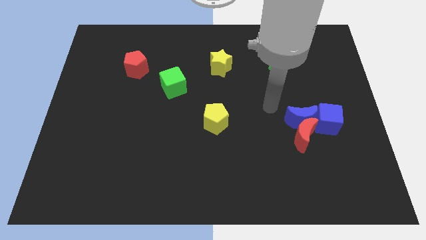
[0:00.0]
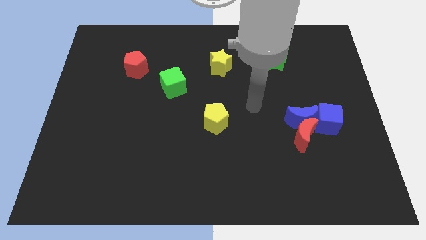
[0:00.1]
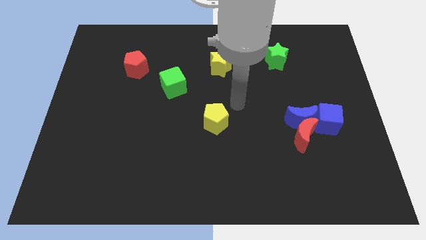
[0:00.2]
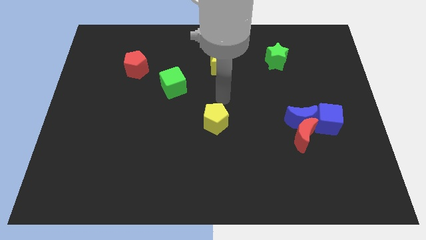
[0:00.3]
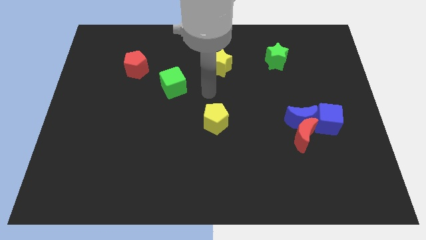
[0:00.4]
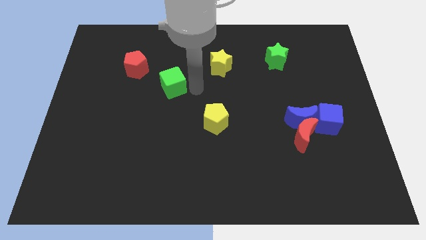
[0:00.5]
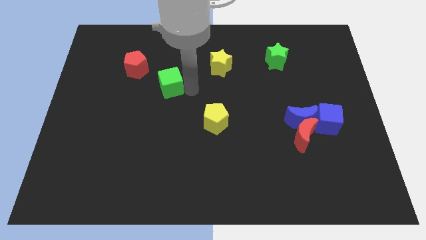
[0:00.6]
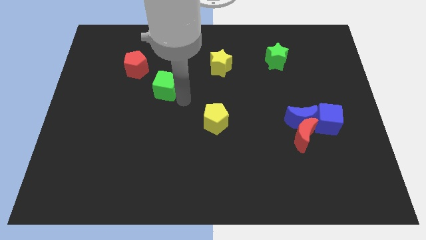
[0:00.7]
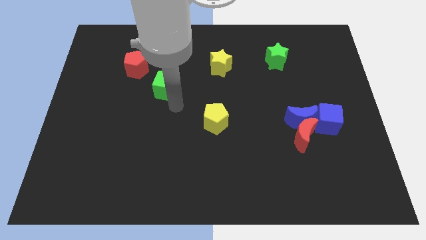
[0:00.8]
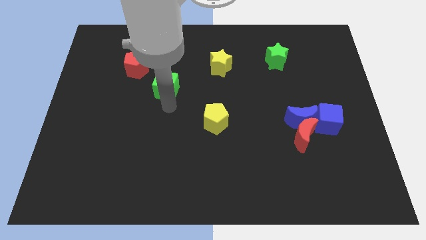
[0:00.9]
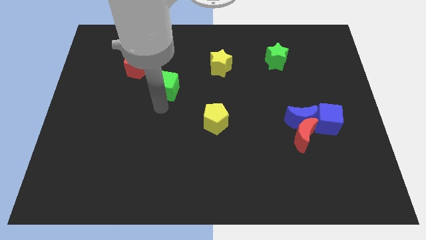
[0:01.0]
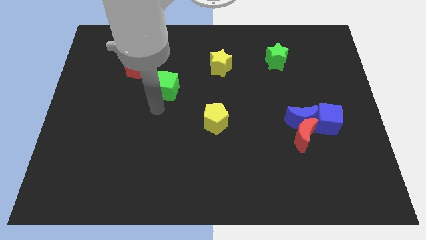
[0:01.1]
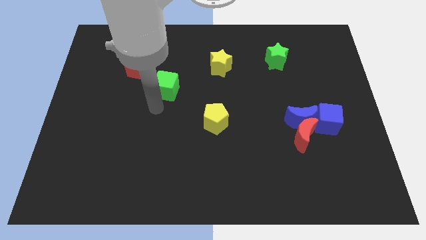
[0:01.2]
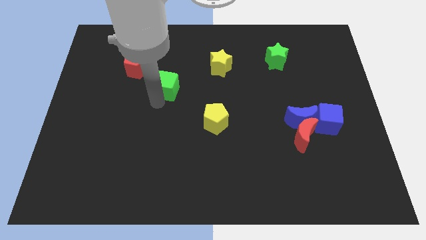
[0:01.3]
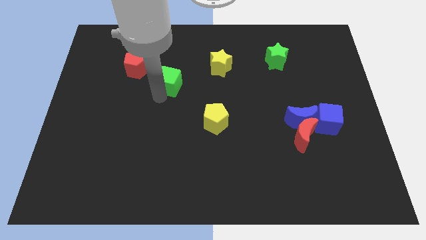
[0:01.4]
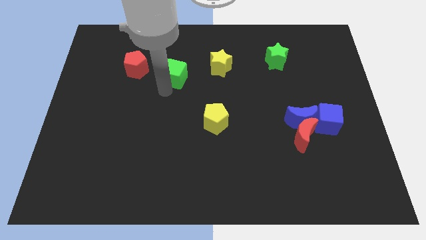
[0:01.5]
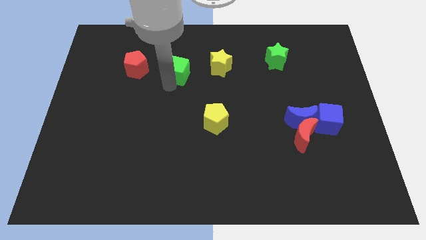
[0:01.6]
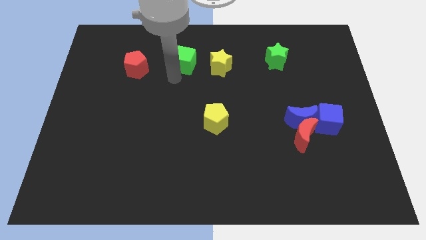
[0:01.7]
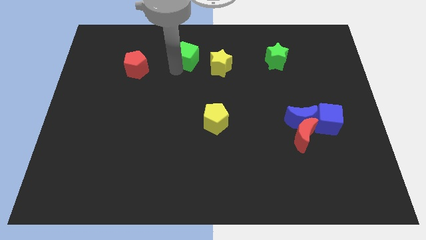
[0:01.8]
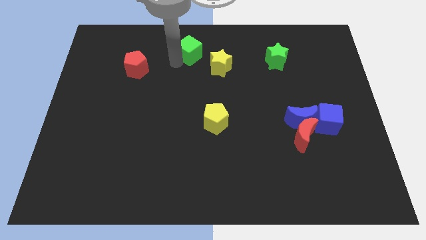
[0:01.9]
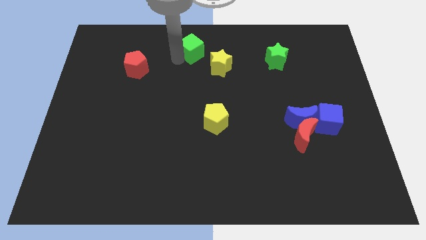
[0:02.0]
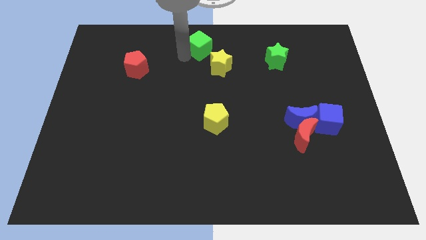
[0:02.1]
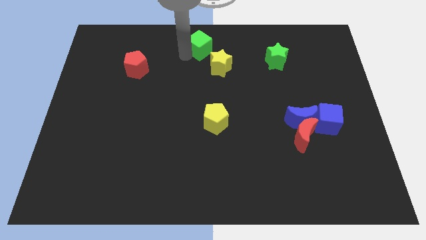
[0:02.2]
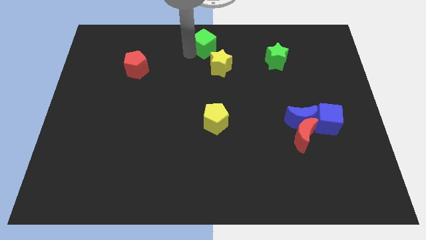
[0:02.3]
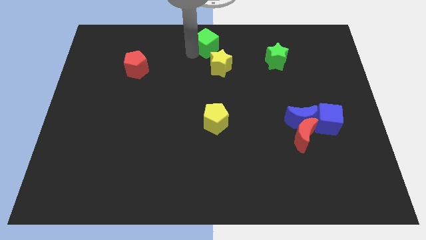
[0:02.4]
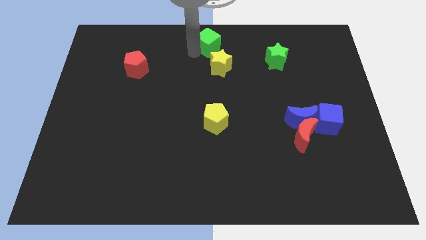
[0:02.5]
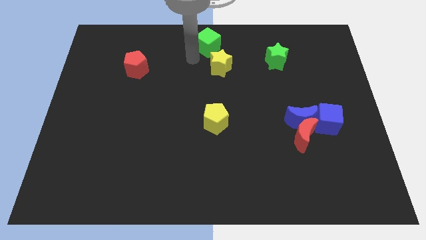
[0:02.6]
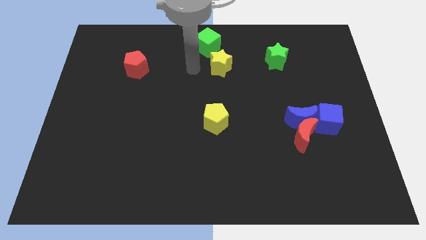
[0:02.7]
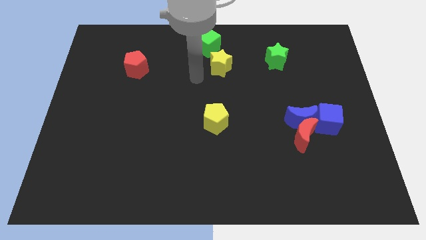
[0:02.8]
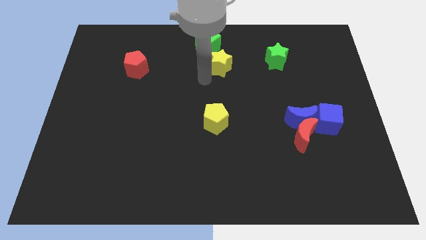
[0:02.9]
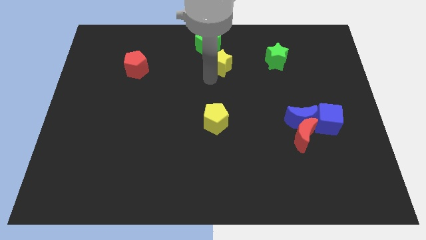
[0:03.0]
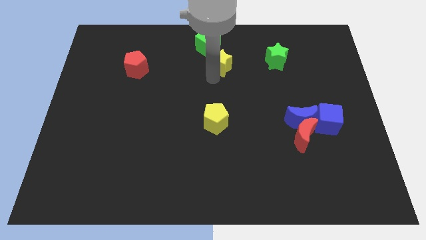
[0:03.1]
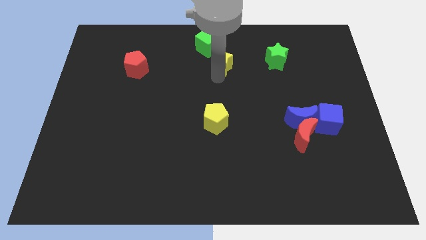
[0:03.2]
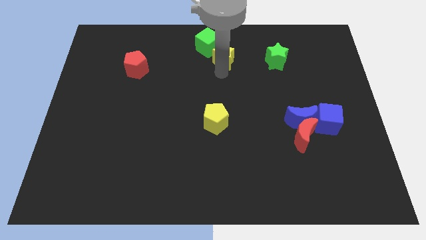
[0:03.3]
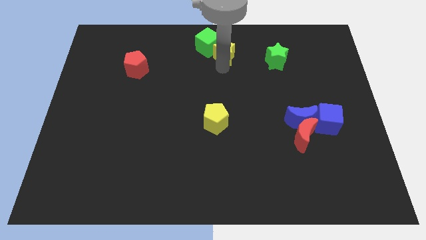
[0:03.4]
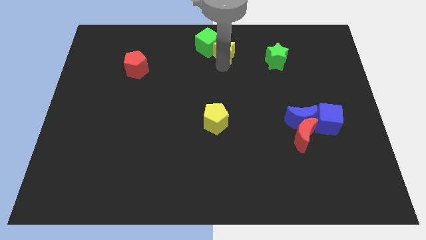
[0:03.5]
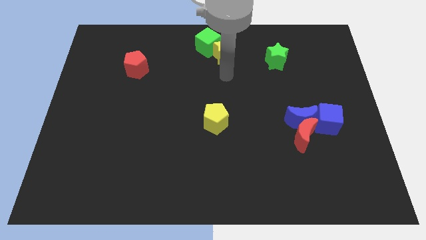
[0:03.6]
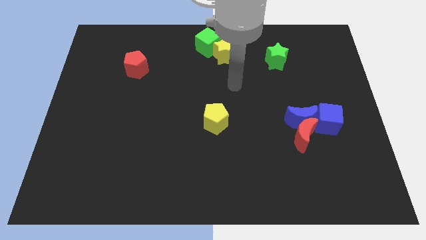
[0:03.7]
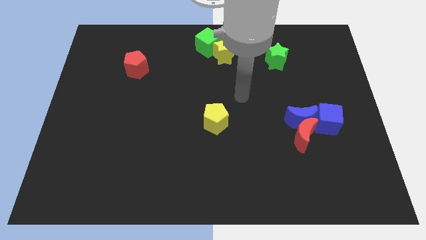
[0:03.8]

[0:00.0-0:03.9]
place the green cube towards the top left side of the yellow star

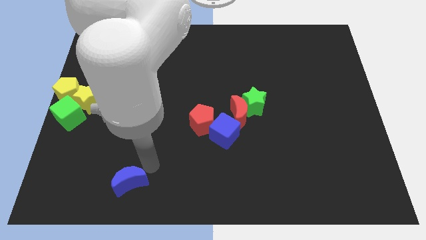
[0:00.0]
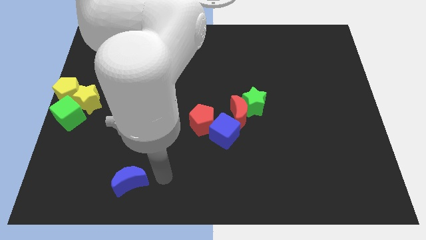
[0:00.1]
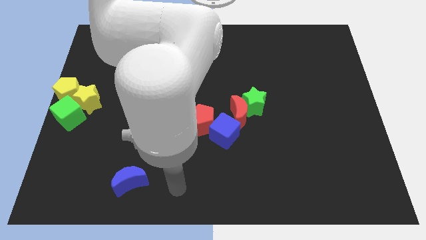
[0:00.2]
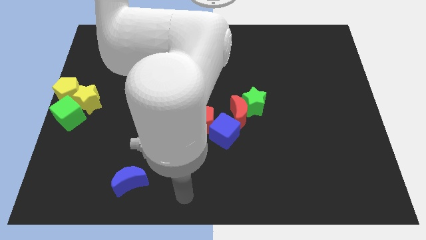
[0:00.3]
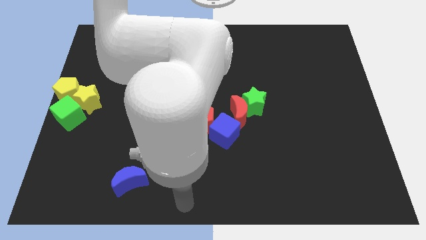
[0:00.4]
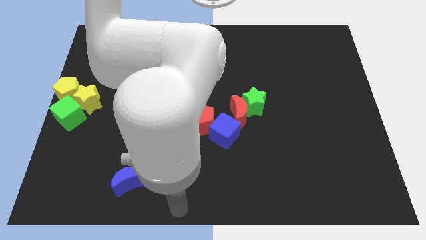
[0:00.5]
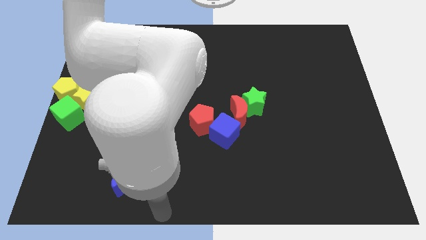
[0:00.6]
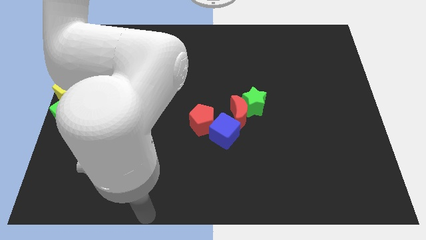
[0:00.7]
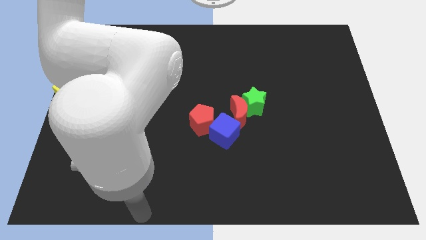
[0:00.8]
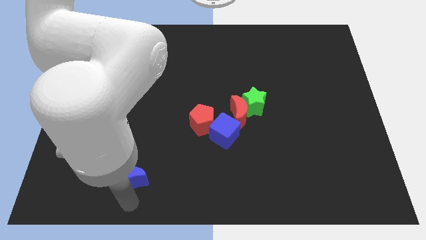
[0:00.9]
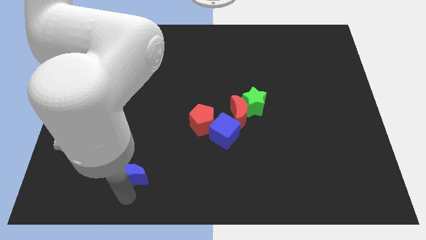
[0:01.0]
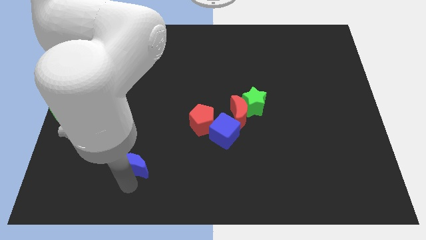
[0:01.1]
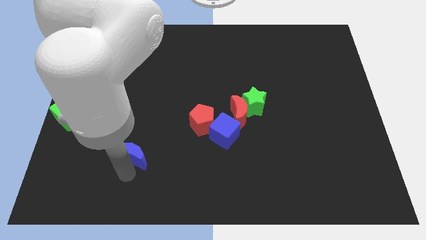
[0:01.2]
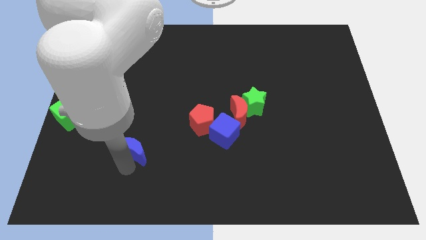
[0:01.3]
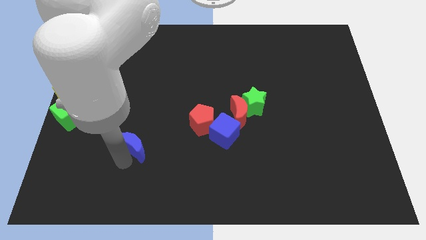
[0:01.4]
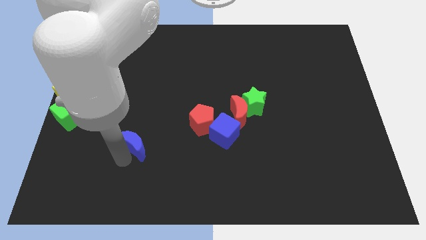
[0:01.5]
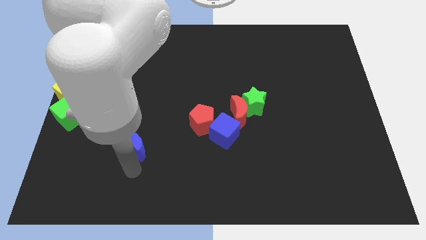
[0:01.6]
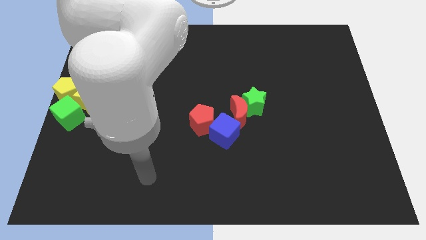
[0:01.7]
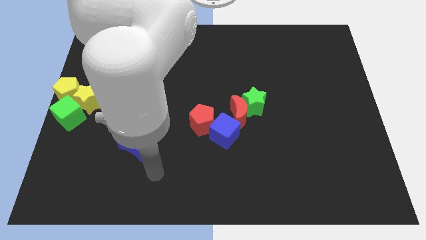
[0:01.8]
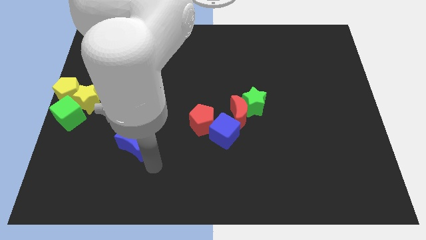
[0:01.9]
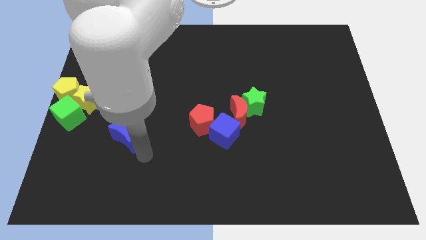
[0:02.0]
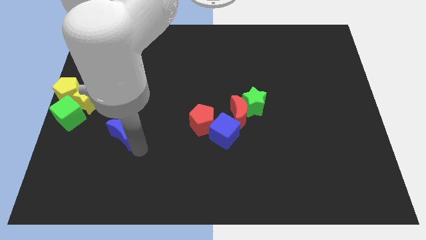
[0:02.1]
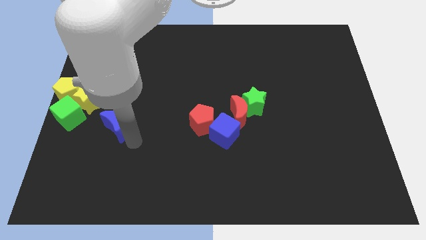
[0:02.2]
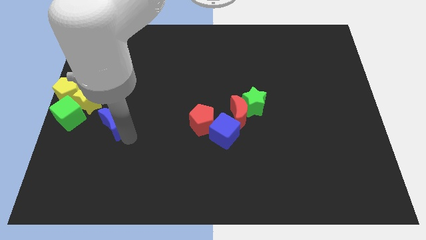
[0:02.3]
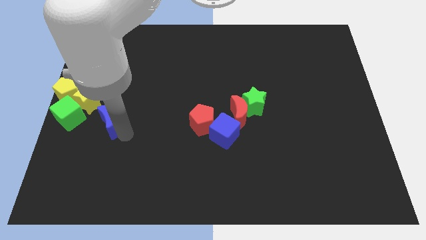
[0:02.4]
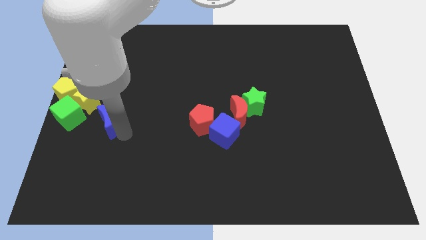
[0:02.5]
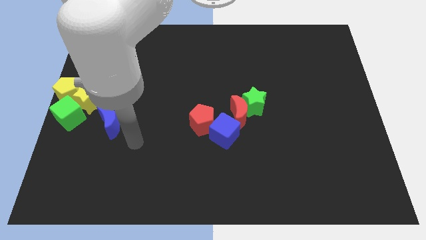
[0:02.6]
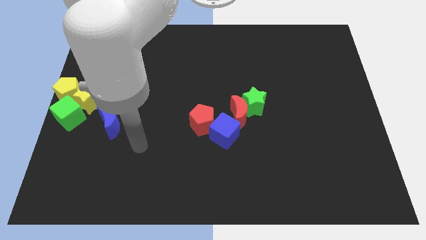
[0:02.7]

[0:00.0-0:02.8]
push the blue crescent diagonally right to the yellow star

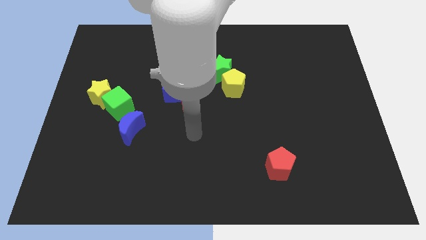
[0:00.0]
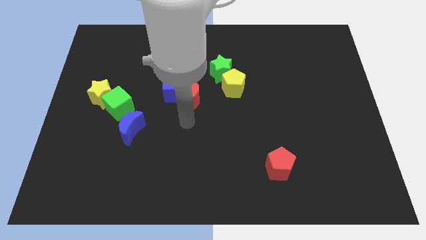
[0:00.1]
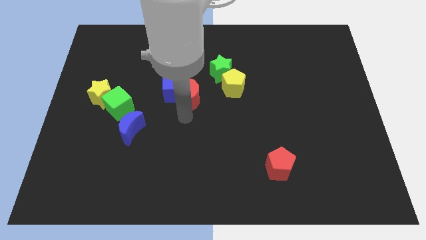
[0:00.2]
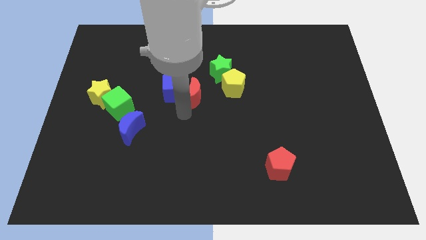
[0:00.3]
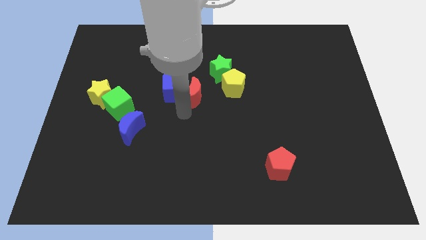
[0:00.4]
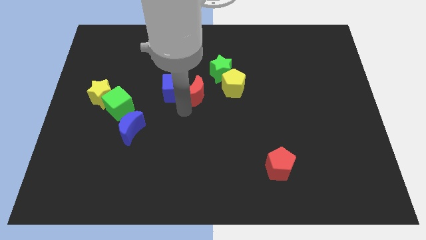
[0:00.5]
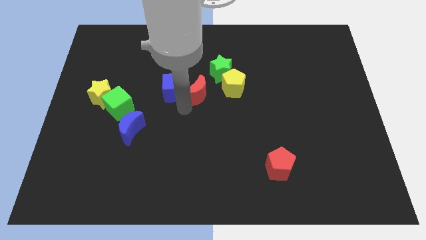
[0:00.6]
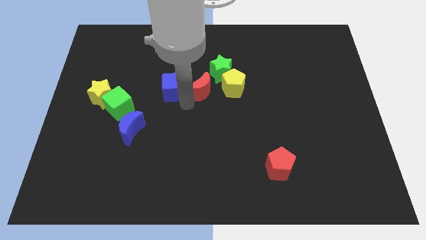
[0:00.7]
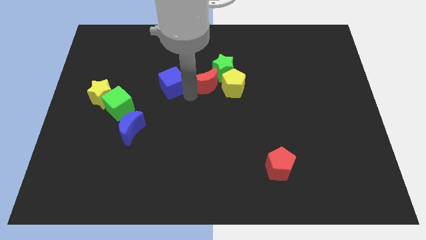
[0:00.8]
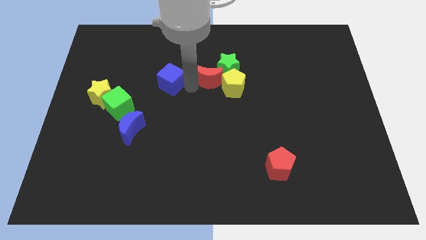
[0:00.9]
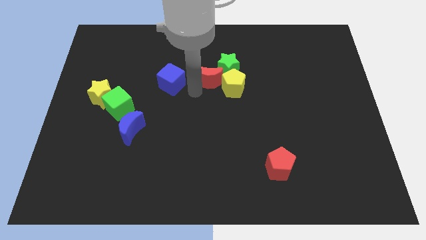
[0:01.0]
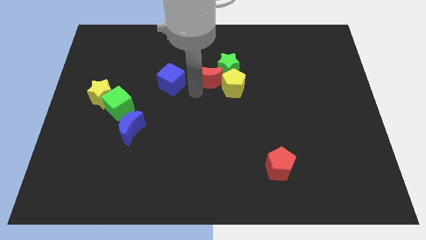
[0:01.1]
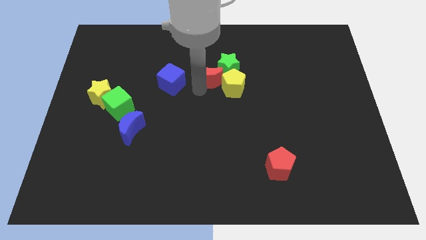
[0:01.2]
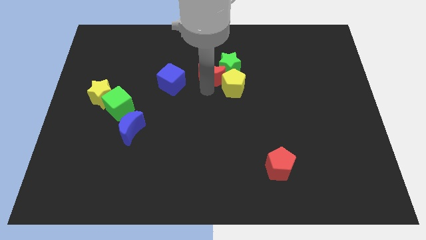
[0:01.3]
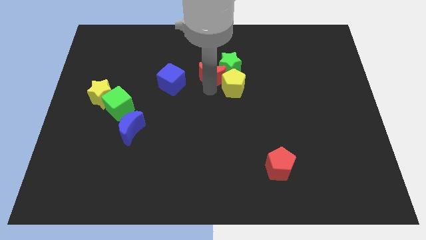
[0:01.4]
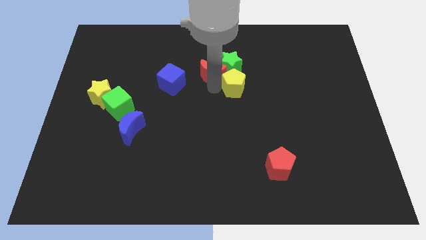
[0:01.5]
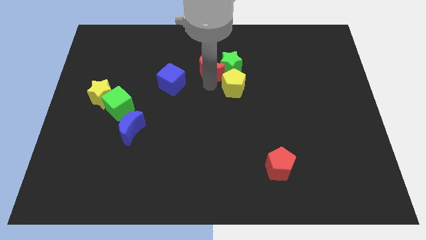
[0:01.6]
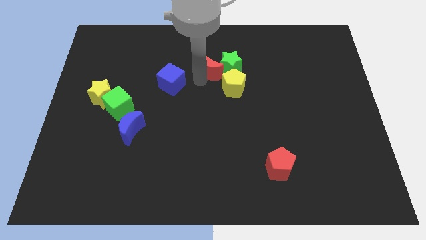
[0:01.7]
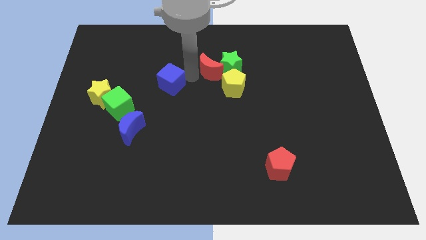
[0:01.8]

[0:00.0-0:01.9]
push the red crescent left to the green star

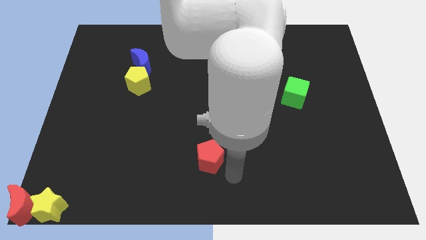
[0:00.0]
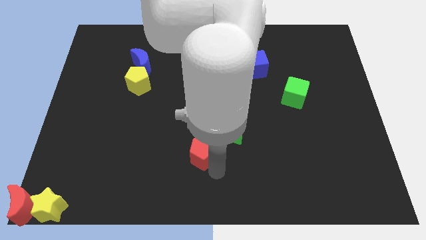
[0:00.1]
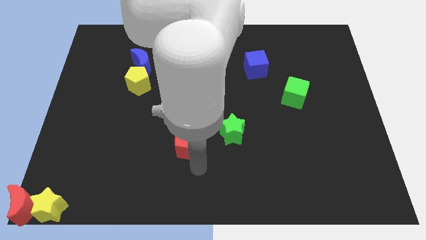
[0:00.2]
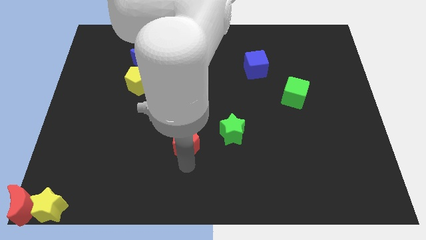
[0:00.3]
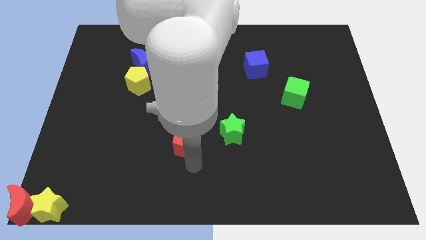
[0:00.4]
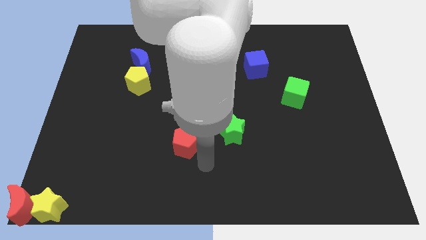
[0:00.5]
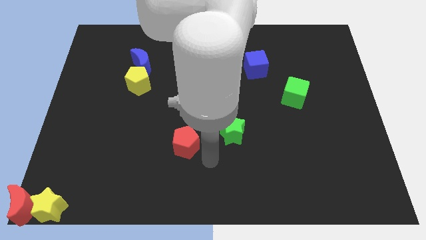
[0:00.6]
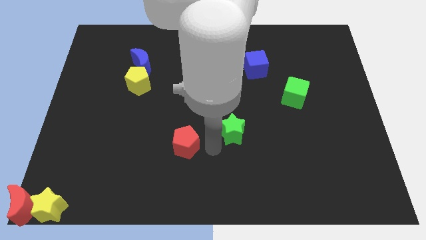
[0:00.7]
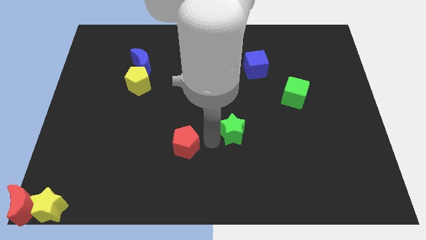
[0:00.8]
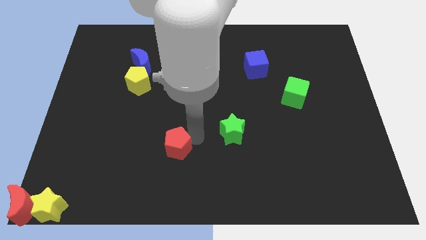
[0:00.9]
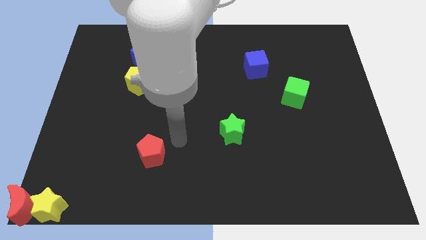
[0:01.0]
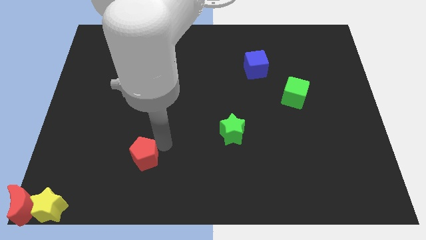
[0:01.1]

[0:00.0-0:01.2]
move the red crescent diagonally on the top right side of the yellow star
